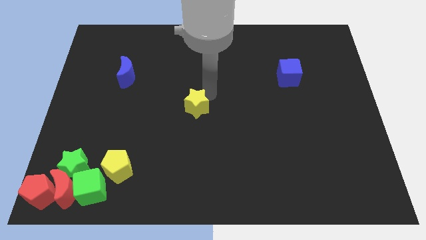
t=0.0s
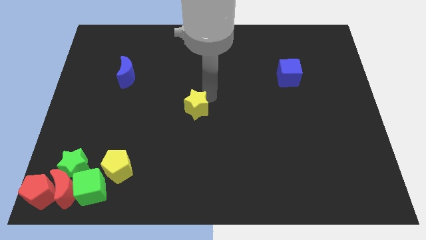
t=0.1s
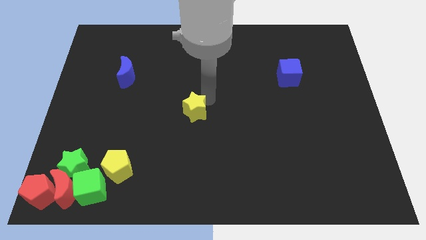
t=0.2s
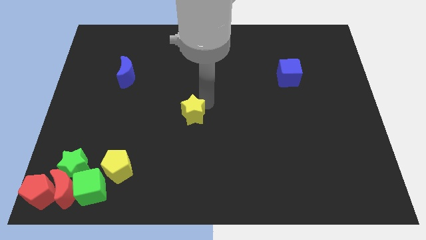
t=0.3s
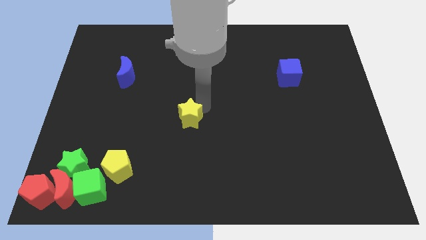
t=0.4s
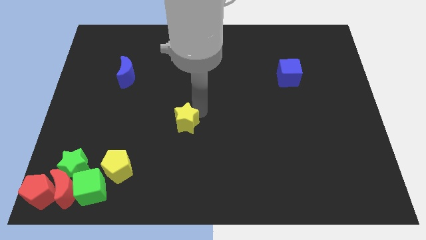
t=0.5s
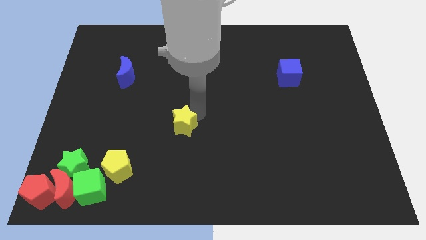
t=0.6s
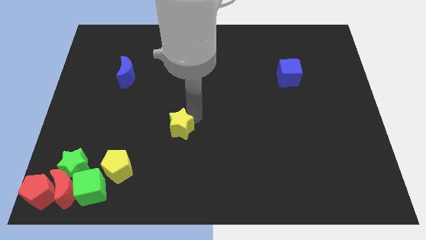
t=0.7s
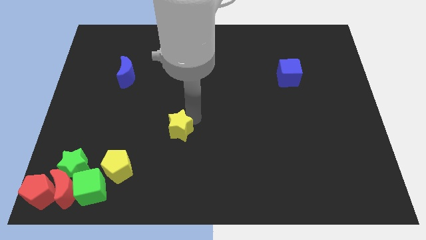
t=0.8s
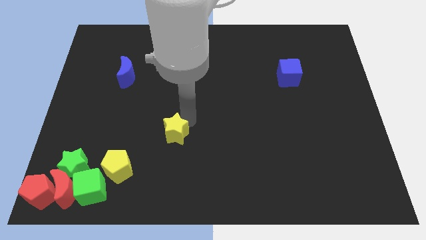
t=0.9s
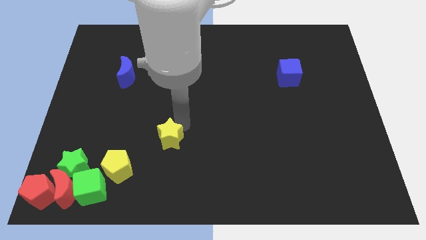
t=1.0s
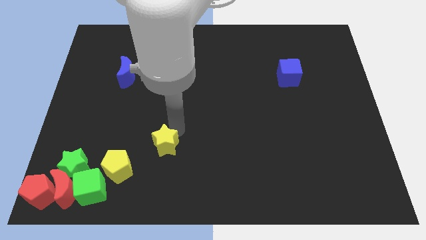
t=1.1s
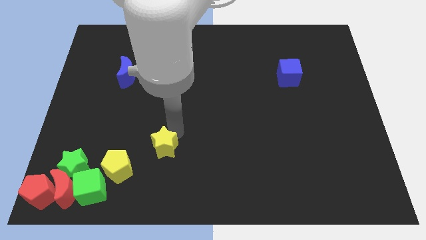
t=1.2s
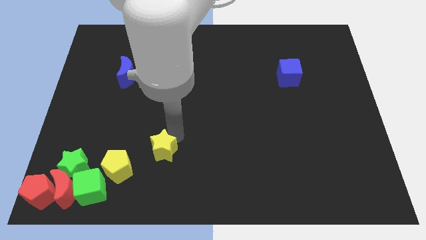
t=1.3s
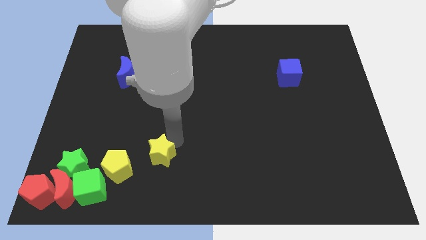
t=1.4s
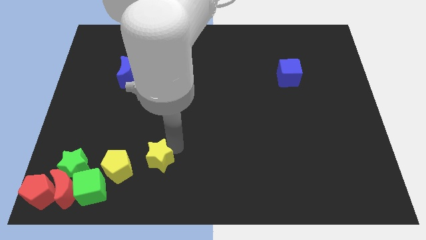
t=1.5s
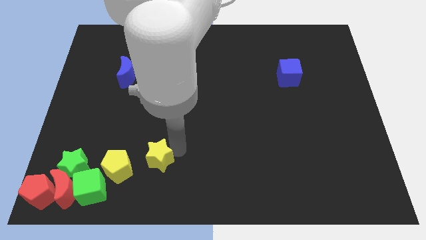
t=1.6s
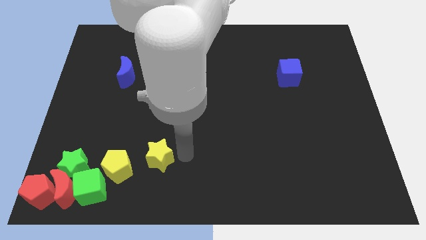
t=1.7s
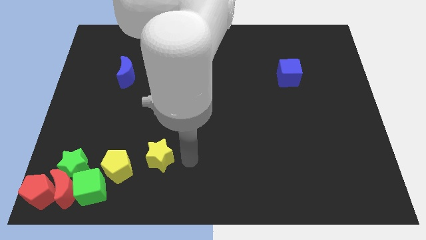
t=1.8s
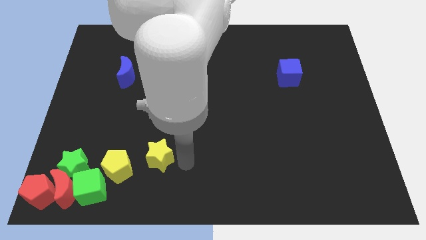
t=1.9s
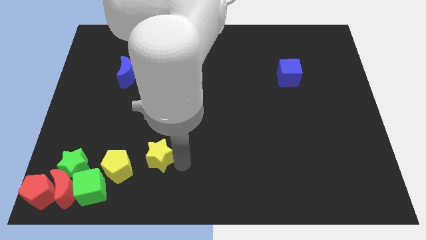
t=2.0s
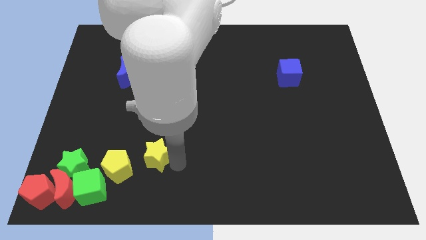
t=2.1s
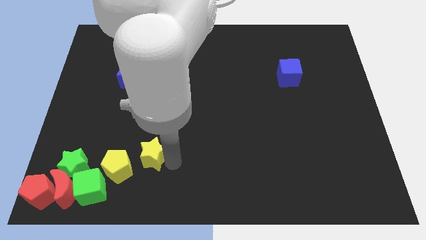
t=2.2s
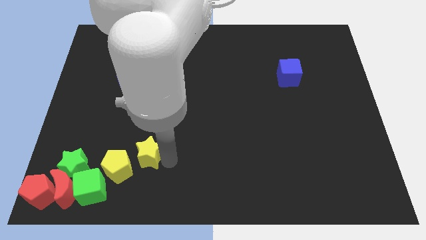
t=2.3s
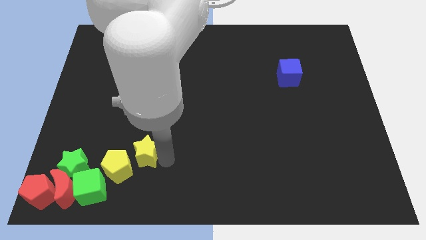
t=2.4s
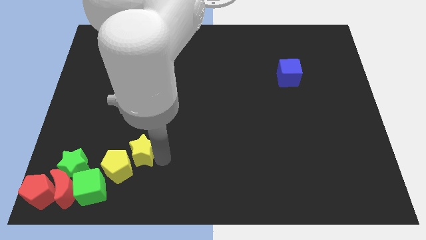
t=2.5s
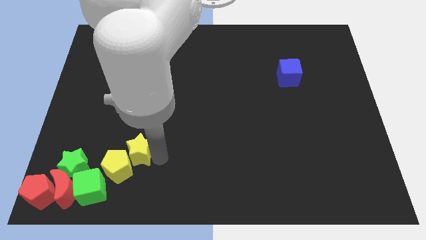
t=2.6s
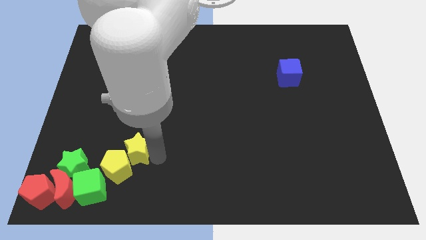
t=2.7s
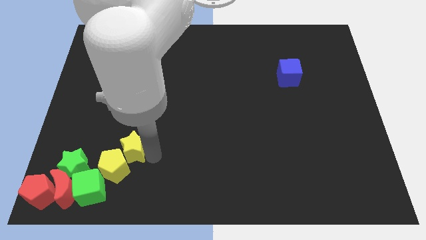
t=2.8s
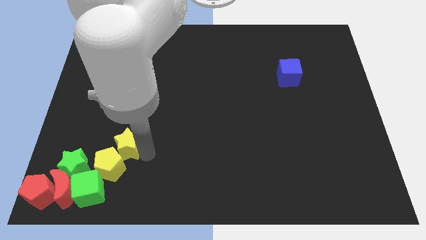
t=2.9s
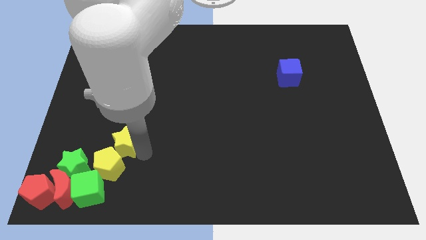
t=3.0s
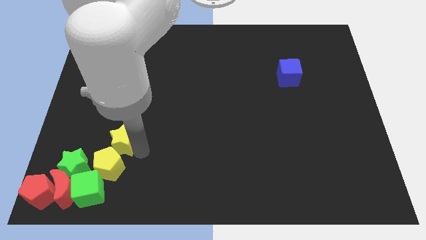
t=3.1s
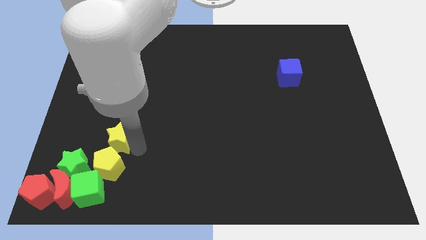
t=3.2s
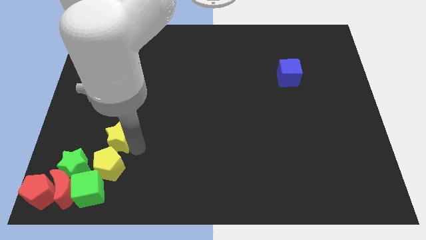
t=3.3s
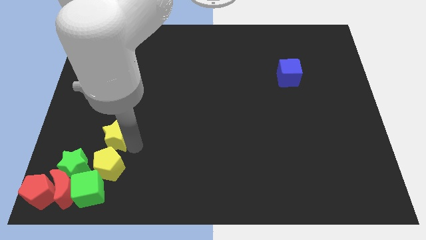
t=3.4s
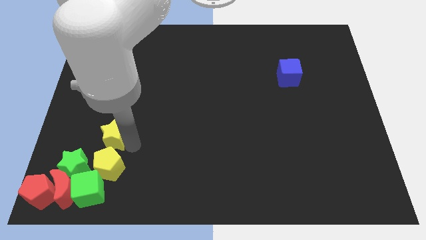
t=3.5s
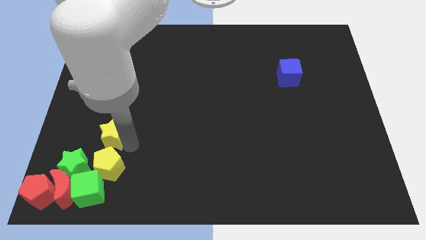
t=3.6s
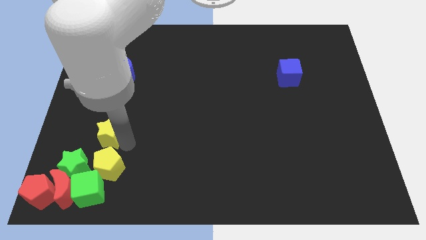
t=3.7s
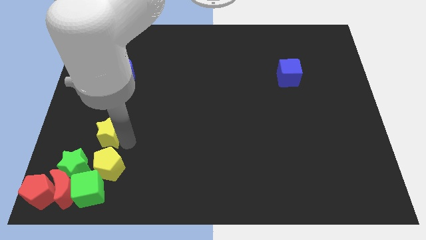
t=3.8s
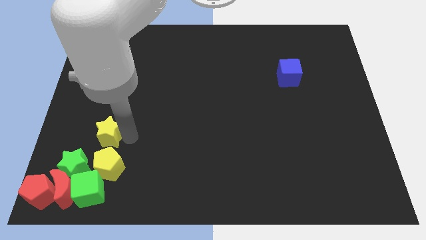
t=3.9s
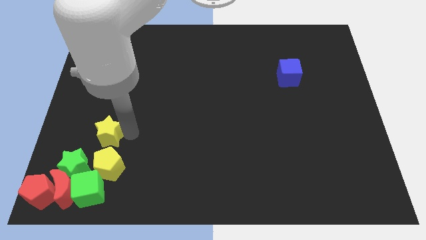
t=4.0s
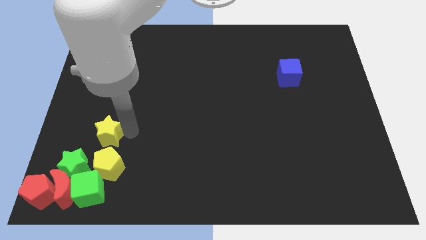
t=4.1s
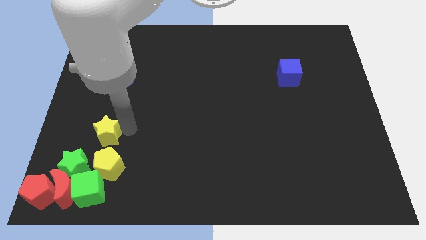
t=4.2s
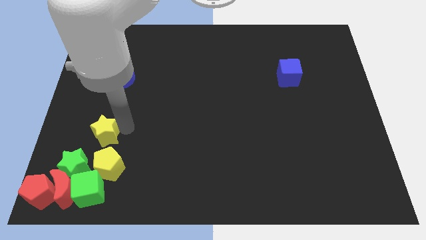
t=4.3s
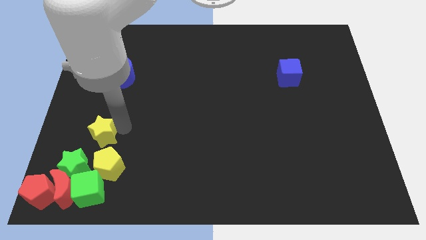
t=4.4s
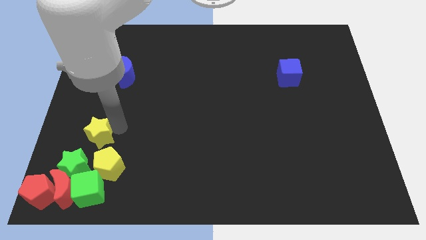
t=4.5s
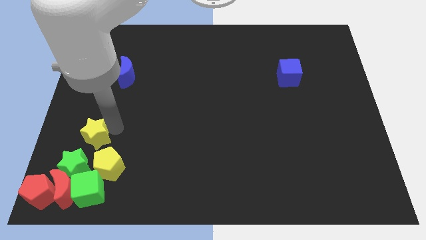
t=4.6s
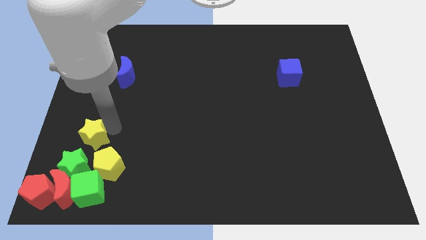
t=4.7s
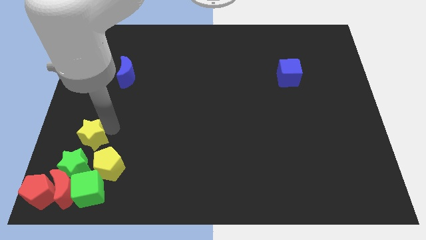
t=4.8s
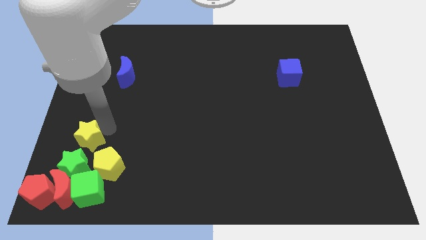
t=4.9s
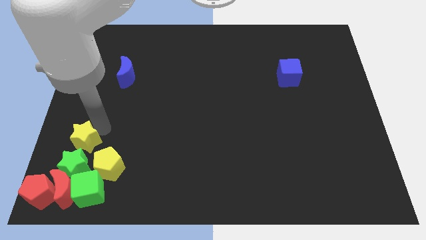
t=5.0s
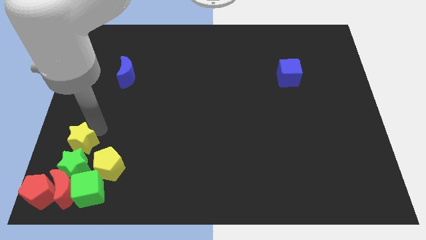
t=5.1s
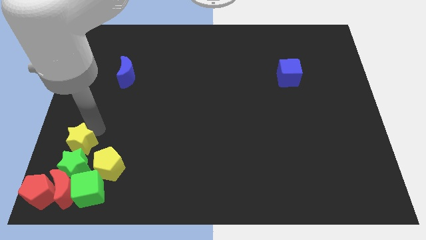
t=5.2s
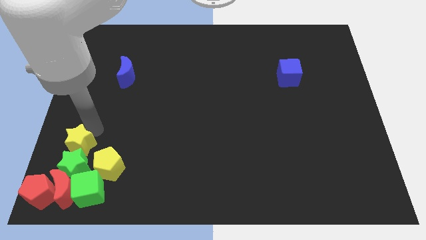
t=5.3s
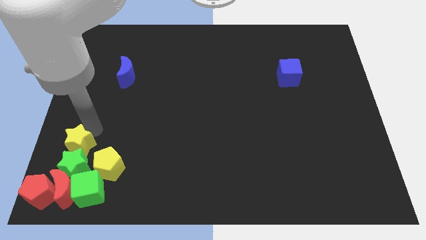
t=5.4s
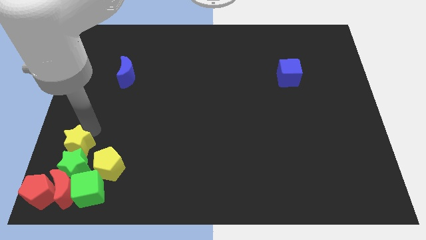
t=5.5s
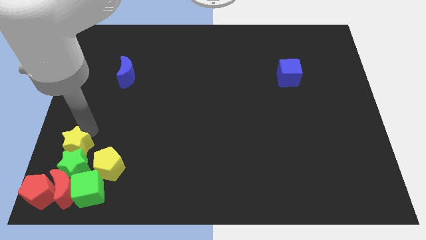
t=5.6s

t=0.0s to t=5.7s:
push the yellow star to the top of the green star

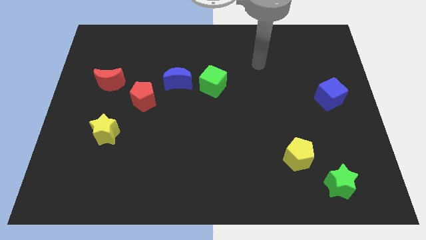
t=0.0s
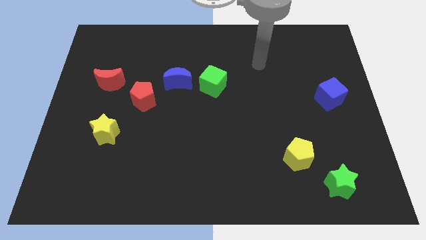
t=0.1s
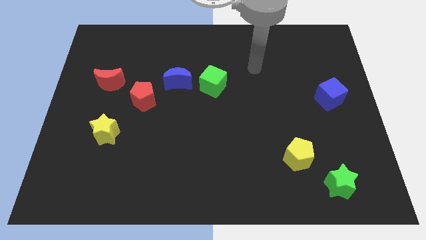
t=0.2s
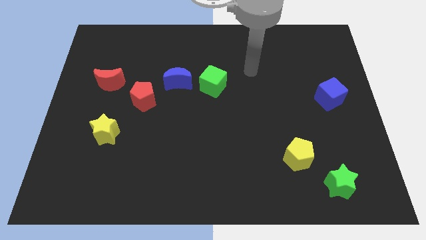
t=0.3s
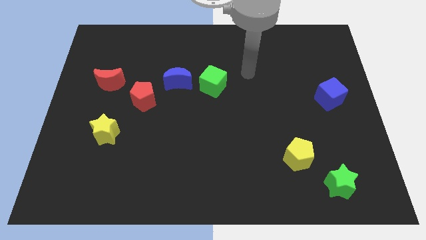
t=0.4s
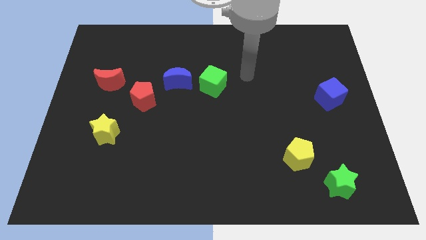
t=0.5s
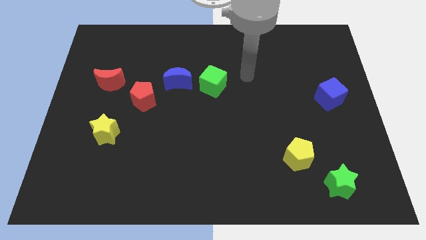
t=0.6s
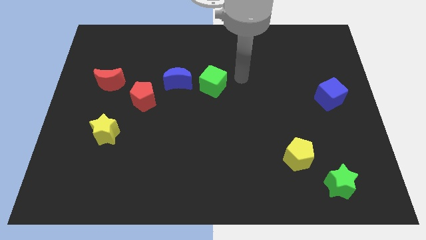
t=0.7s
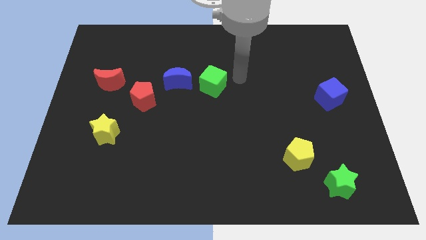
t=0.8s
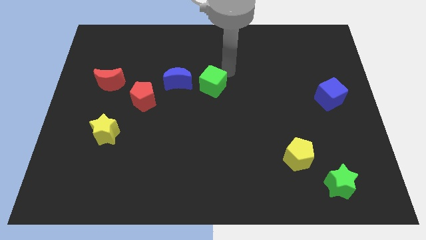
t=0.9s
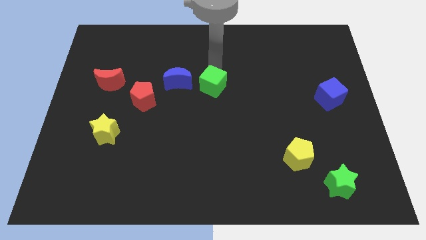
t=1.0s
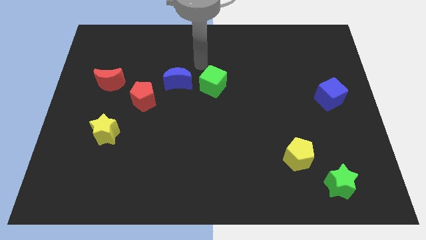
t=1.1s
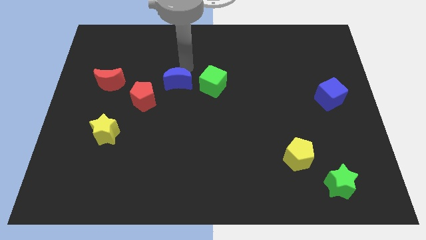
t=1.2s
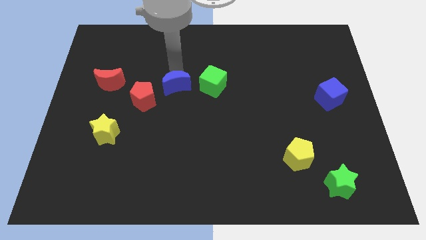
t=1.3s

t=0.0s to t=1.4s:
move your arm to the top side of the blue moon

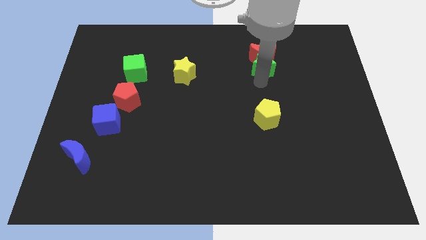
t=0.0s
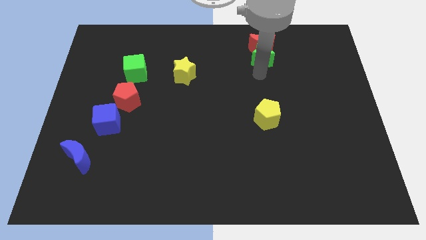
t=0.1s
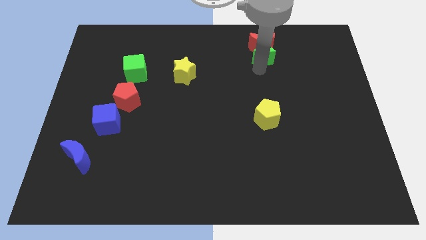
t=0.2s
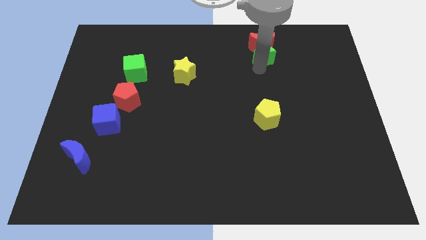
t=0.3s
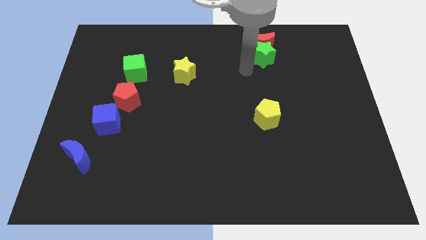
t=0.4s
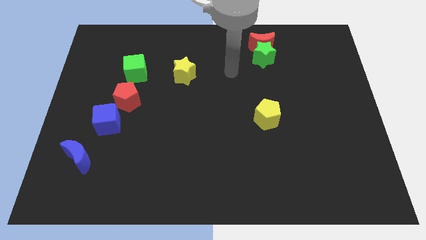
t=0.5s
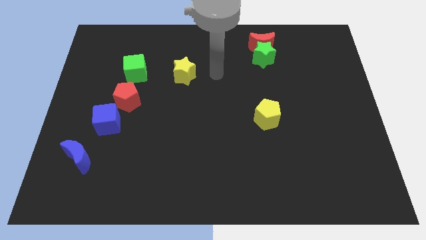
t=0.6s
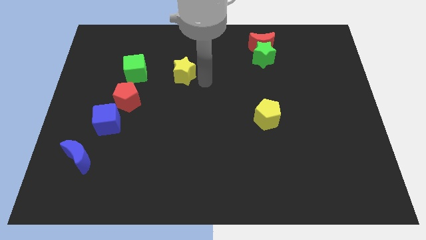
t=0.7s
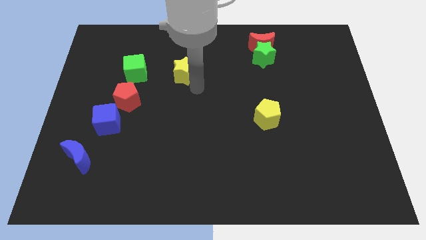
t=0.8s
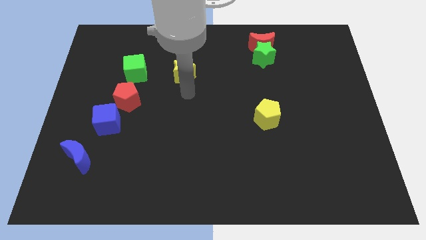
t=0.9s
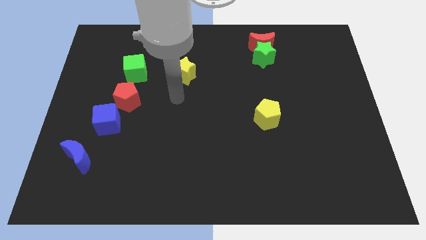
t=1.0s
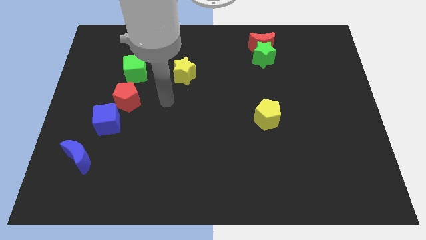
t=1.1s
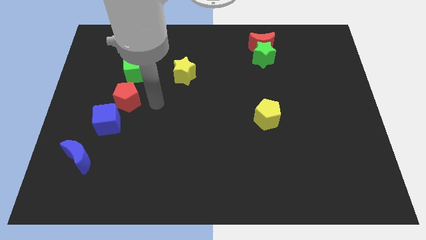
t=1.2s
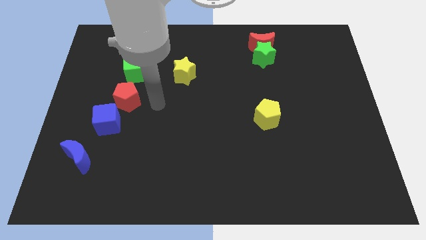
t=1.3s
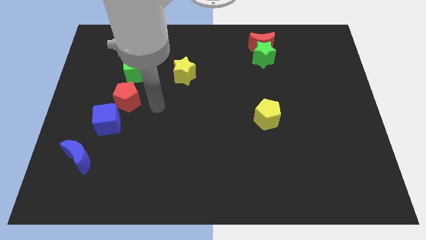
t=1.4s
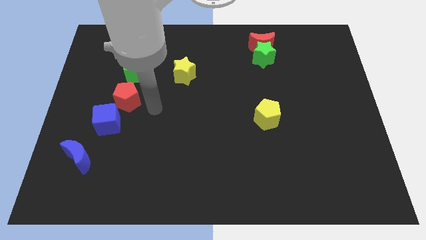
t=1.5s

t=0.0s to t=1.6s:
move your arm right to the red pentagon
